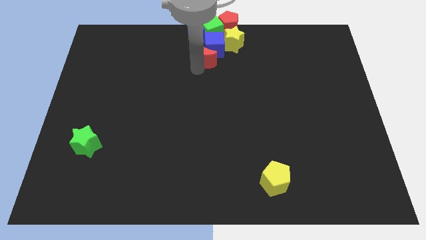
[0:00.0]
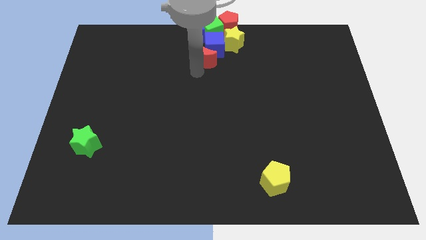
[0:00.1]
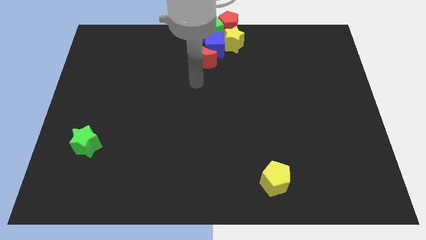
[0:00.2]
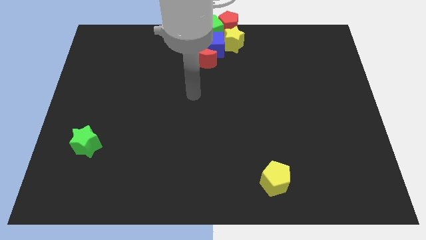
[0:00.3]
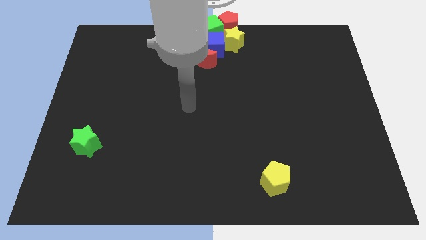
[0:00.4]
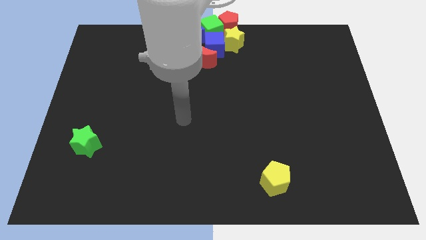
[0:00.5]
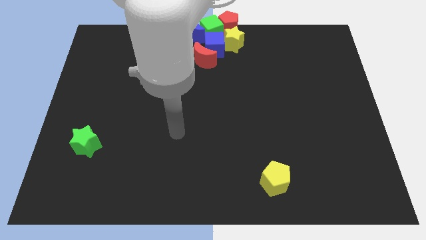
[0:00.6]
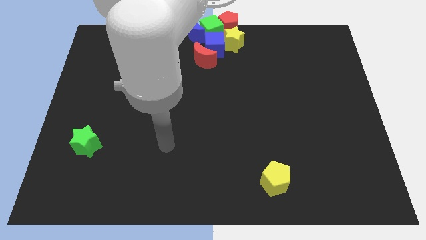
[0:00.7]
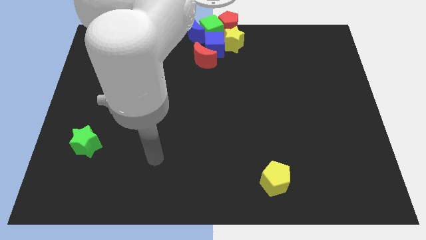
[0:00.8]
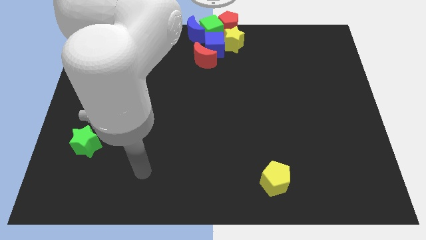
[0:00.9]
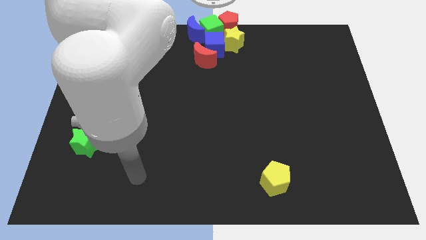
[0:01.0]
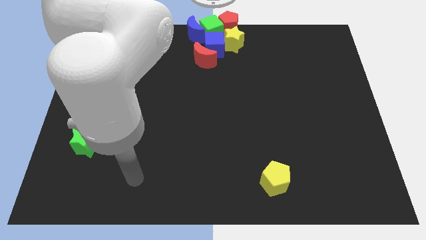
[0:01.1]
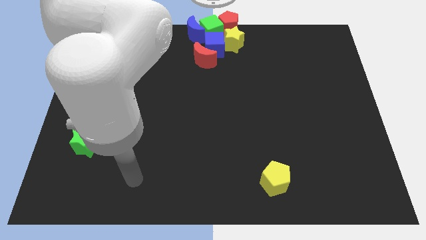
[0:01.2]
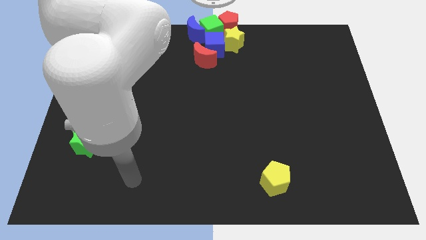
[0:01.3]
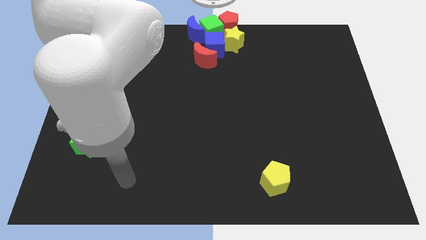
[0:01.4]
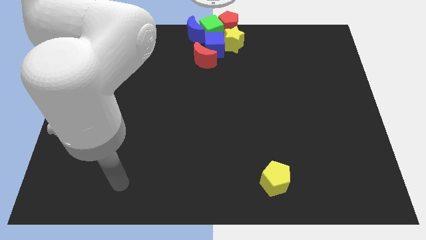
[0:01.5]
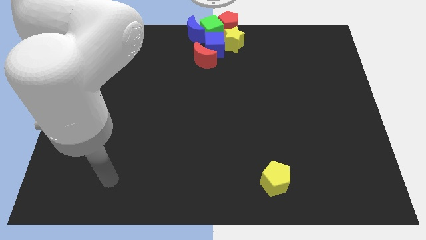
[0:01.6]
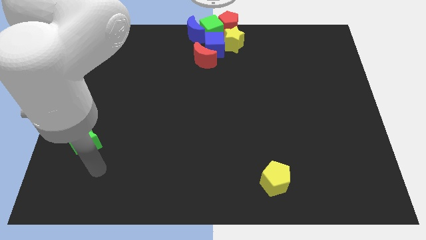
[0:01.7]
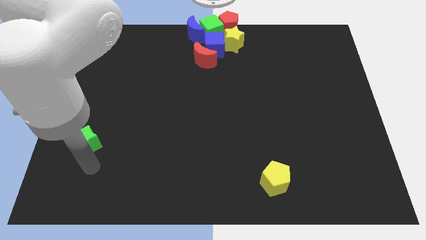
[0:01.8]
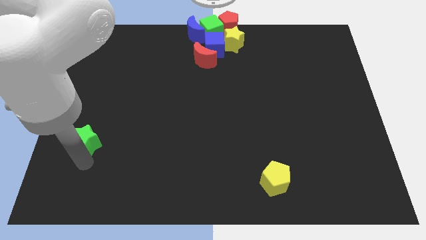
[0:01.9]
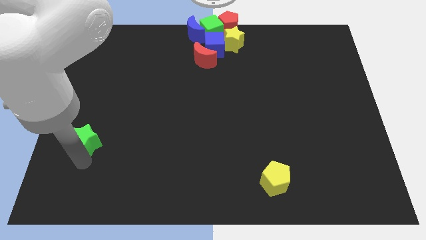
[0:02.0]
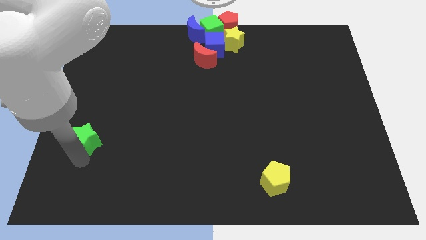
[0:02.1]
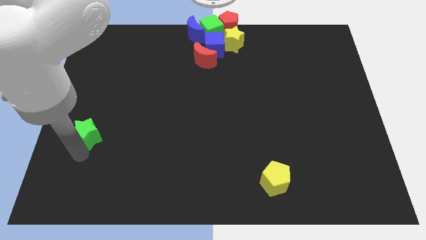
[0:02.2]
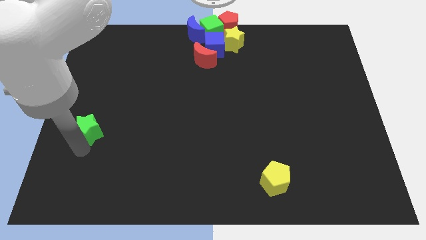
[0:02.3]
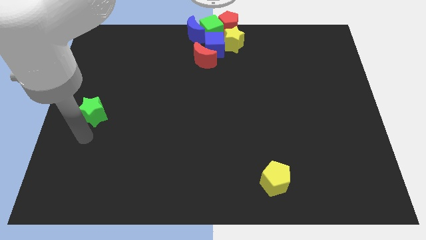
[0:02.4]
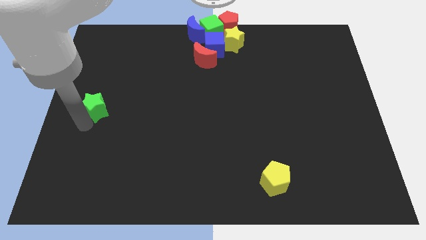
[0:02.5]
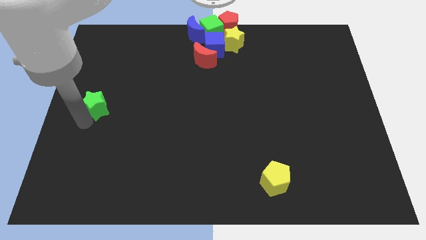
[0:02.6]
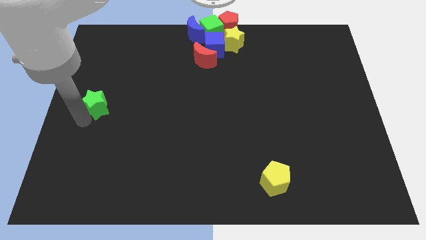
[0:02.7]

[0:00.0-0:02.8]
move the arm away from the red moon

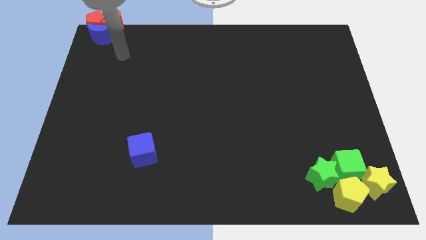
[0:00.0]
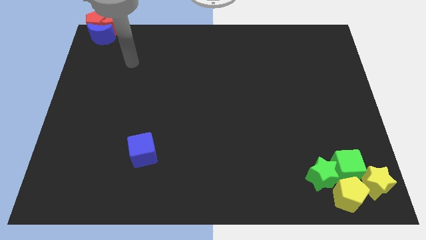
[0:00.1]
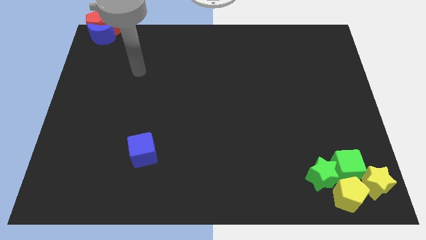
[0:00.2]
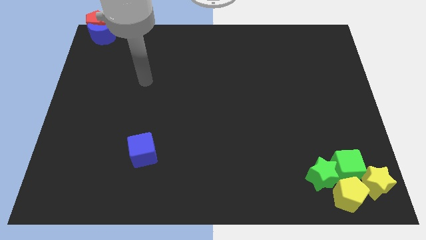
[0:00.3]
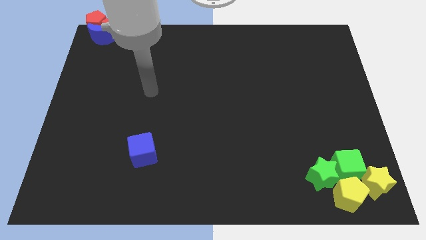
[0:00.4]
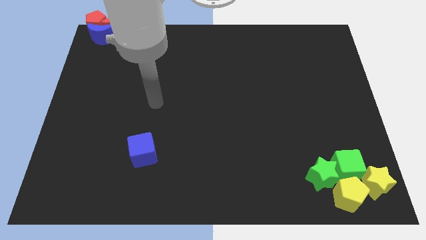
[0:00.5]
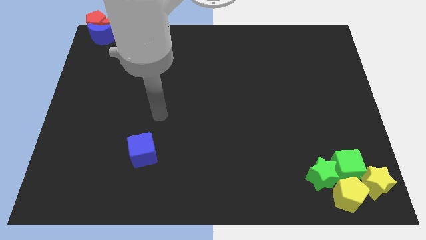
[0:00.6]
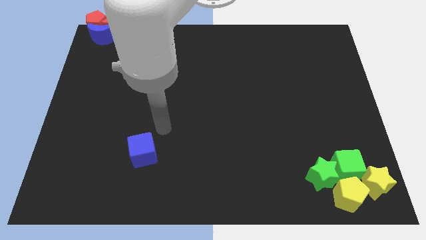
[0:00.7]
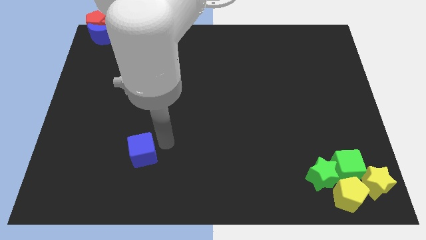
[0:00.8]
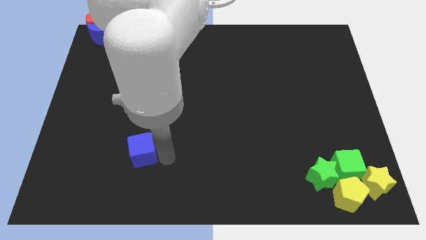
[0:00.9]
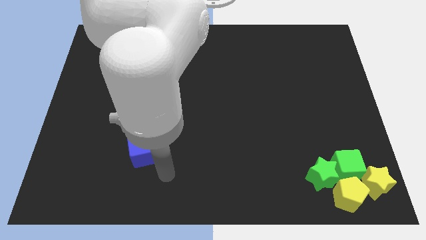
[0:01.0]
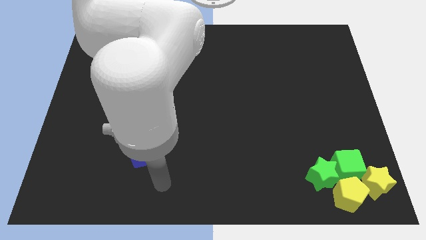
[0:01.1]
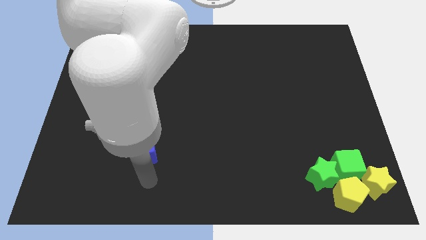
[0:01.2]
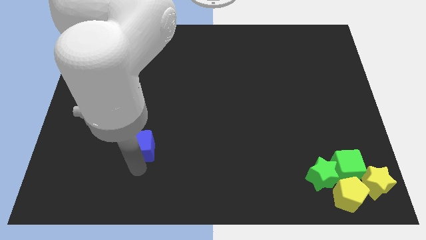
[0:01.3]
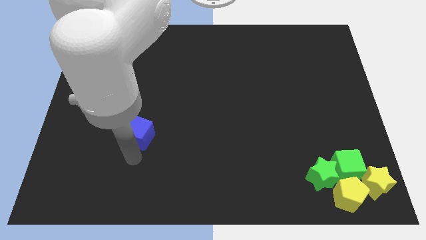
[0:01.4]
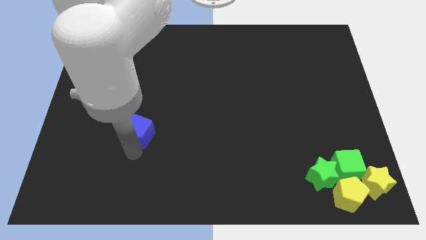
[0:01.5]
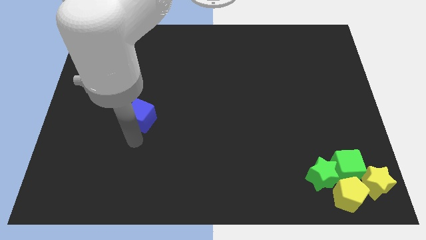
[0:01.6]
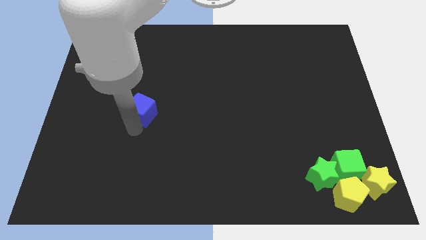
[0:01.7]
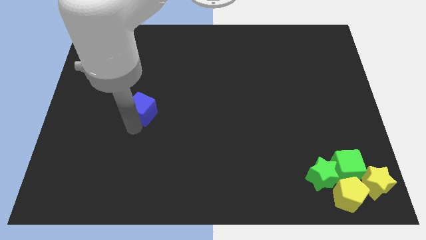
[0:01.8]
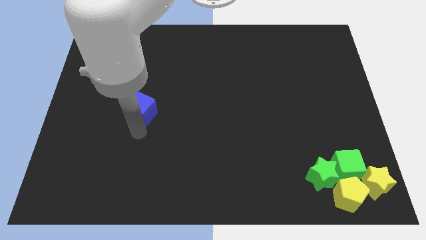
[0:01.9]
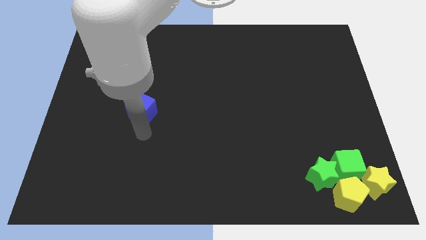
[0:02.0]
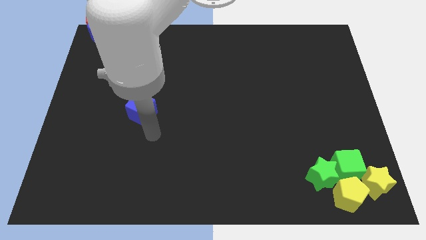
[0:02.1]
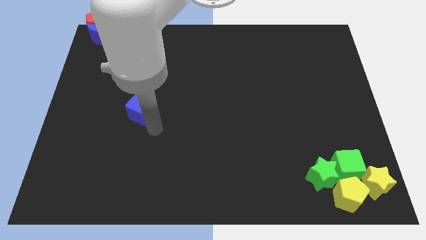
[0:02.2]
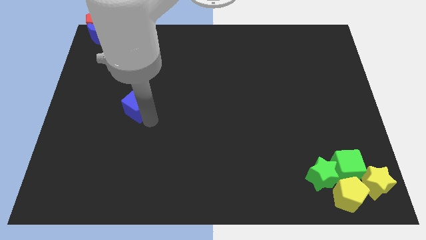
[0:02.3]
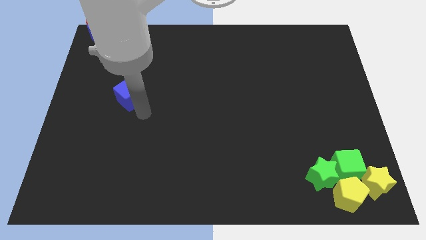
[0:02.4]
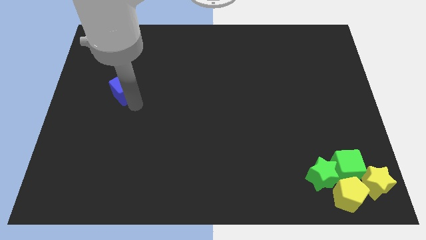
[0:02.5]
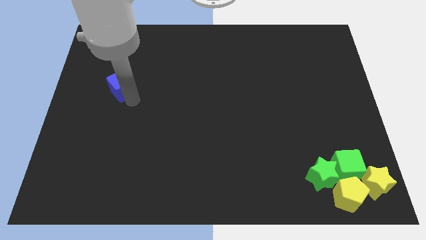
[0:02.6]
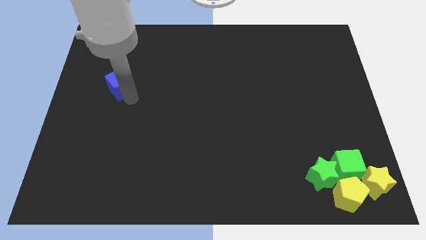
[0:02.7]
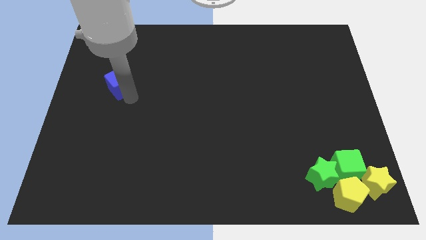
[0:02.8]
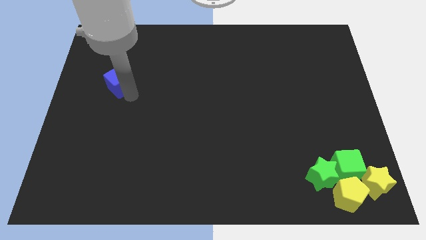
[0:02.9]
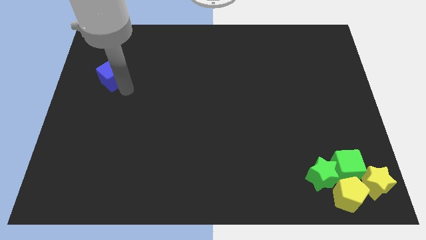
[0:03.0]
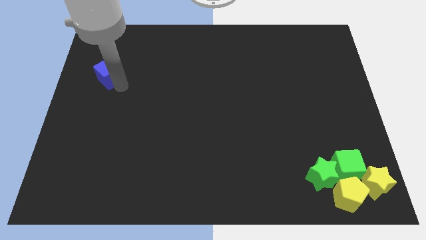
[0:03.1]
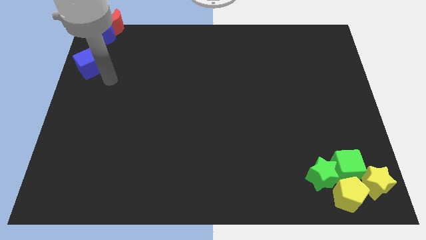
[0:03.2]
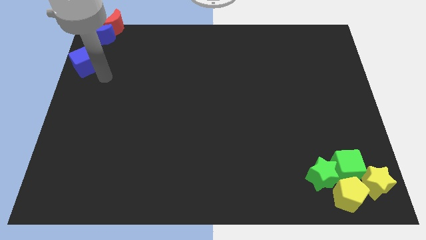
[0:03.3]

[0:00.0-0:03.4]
place blue cube below blue crescent

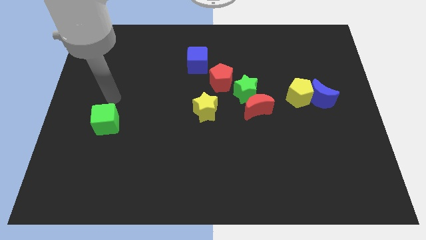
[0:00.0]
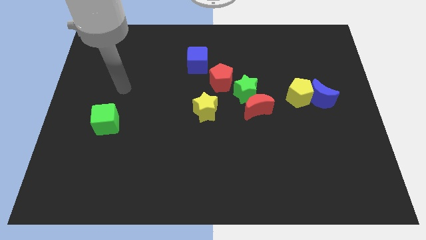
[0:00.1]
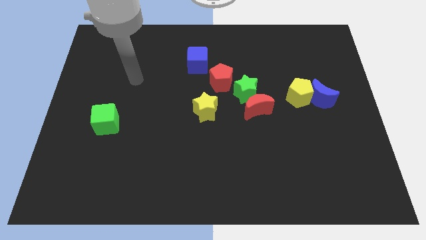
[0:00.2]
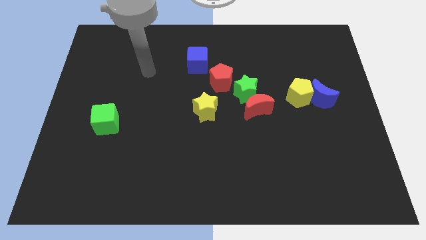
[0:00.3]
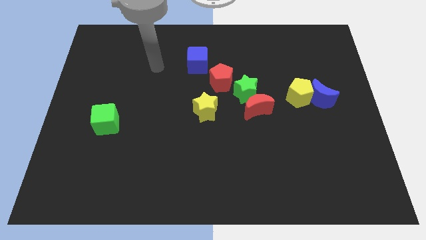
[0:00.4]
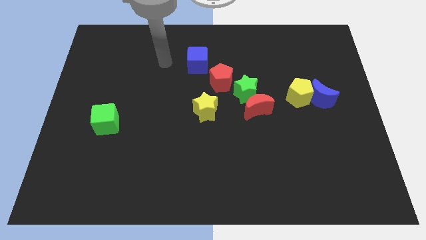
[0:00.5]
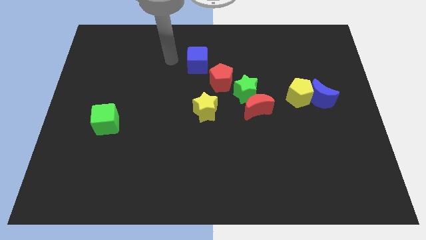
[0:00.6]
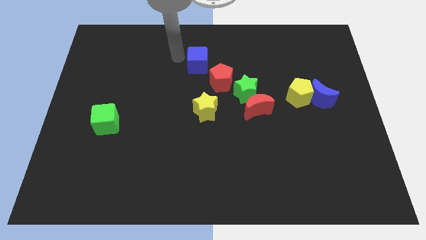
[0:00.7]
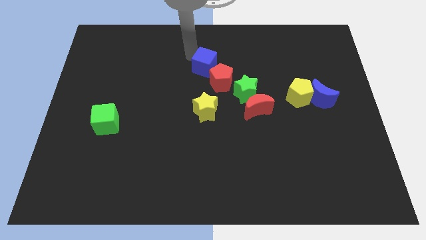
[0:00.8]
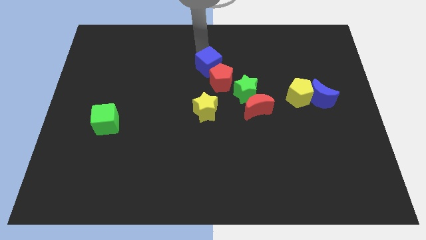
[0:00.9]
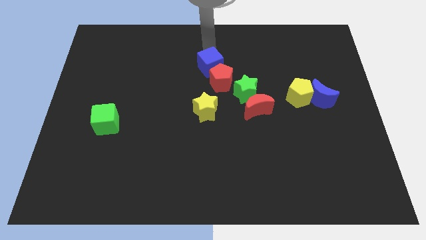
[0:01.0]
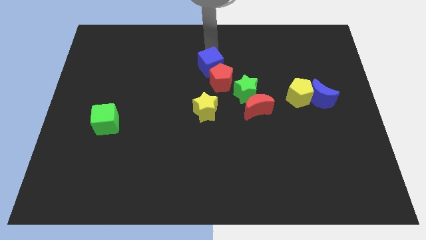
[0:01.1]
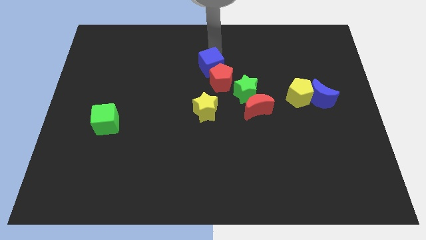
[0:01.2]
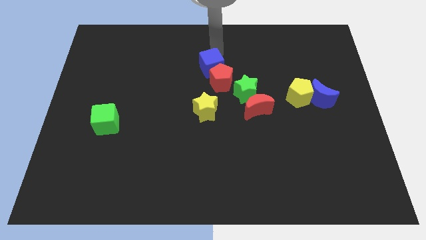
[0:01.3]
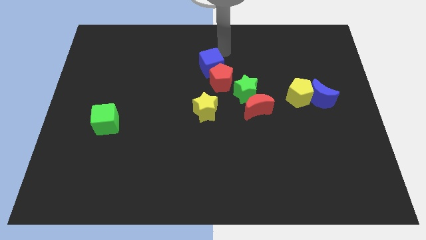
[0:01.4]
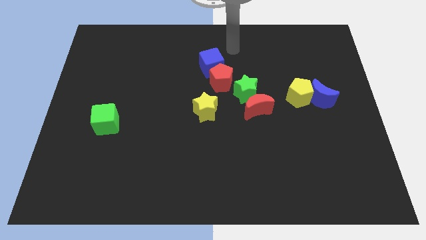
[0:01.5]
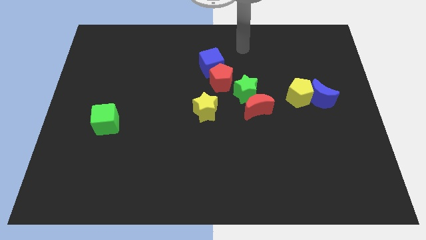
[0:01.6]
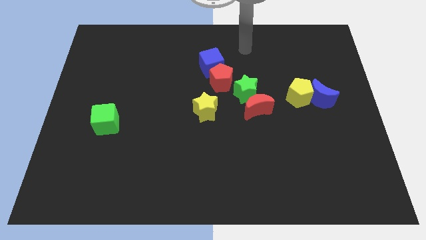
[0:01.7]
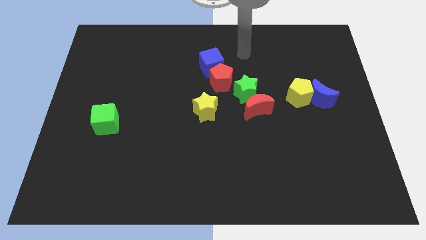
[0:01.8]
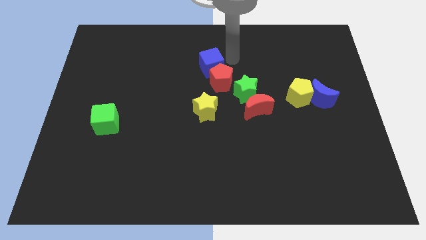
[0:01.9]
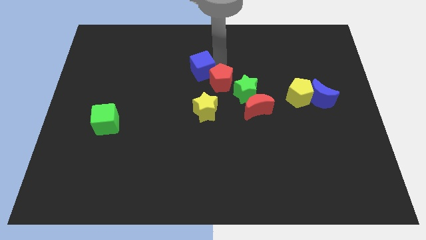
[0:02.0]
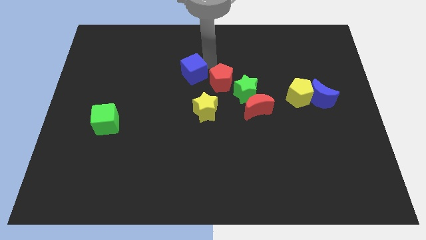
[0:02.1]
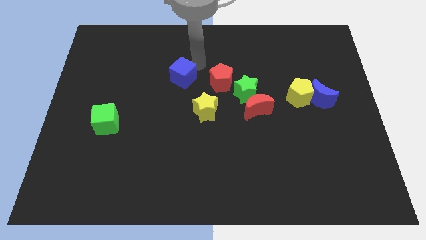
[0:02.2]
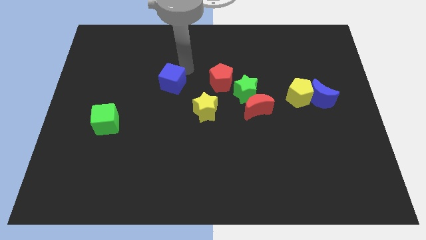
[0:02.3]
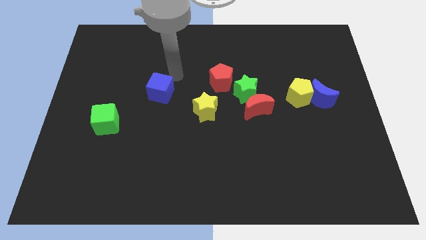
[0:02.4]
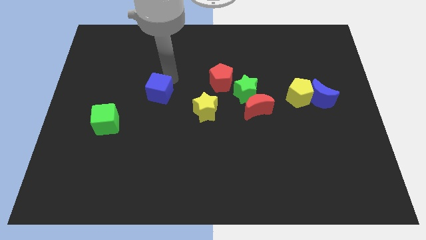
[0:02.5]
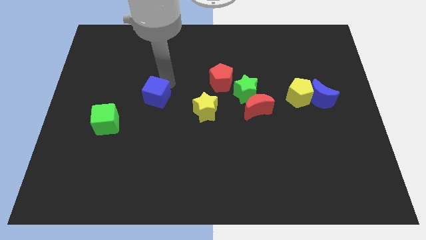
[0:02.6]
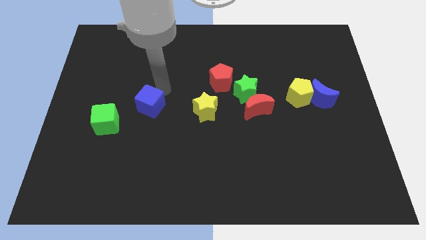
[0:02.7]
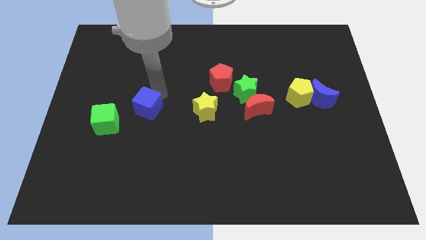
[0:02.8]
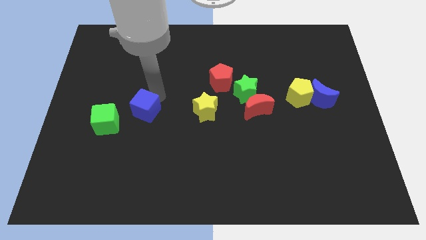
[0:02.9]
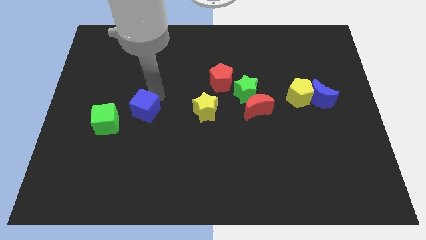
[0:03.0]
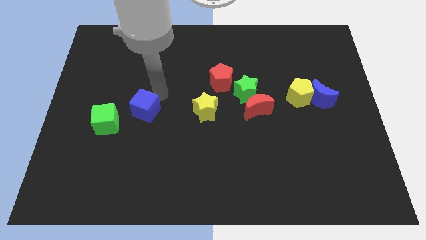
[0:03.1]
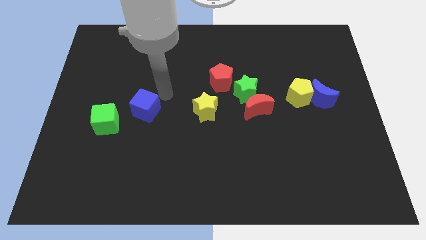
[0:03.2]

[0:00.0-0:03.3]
put the blue cube at the top right side of the green cube
